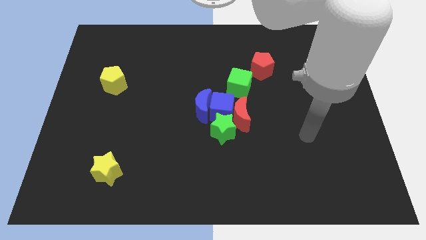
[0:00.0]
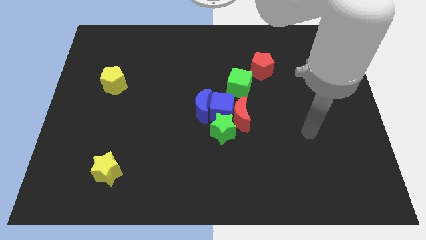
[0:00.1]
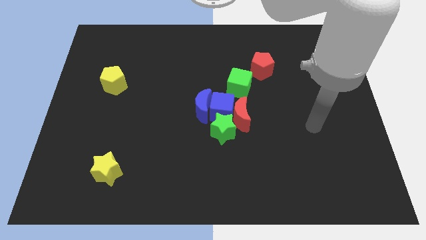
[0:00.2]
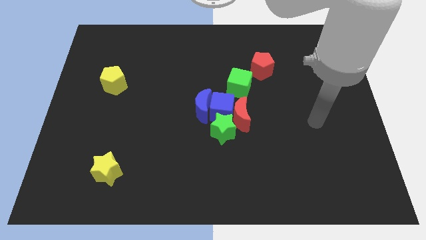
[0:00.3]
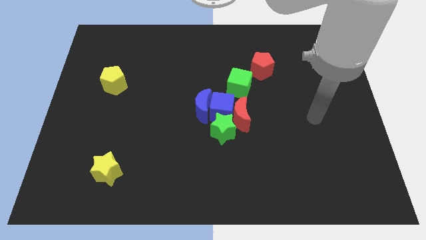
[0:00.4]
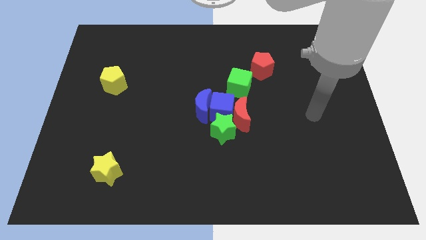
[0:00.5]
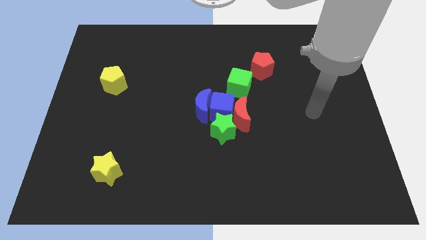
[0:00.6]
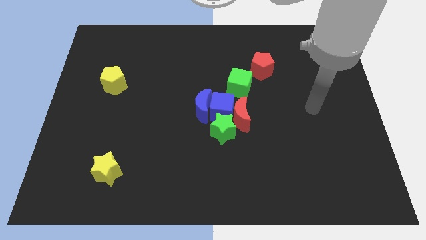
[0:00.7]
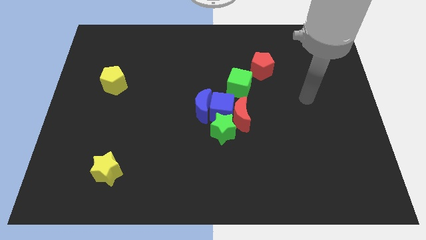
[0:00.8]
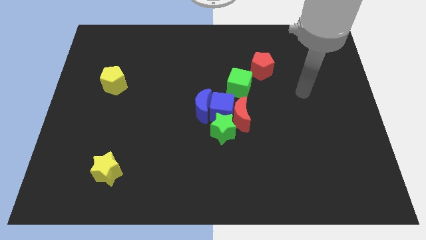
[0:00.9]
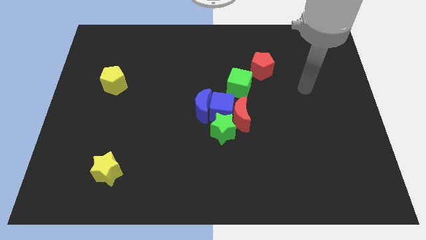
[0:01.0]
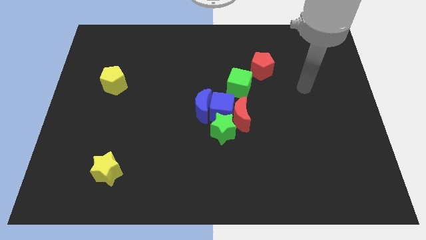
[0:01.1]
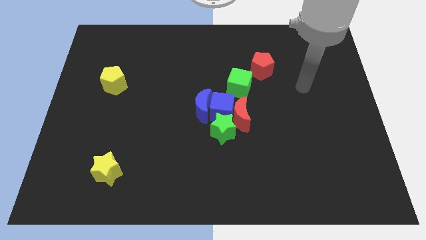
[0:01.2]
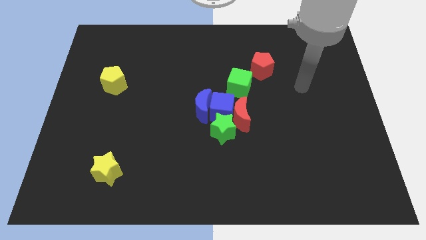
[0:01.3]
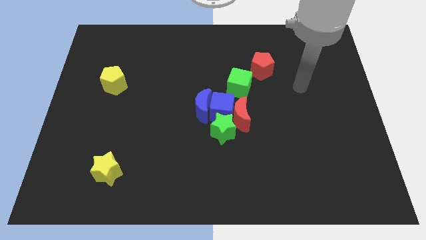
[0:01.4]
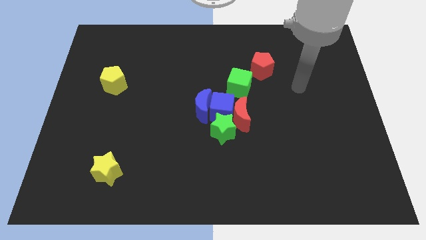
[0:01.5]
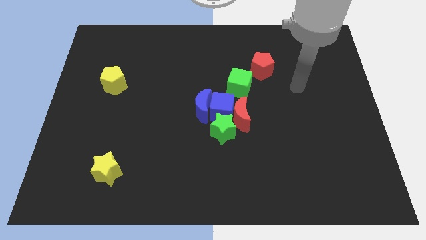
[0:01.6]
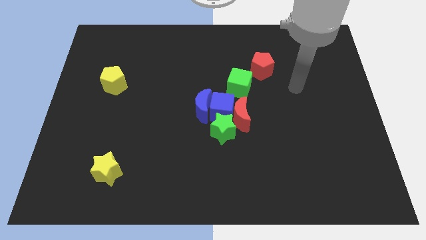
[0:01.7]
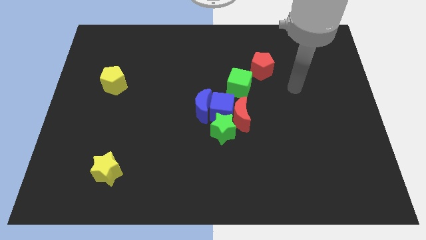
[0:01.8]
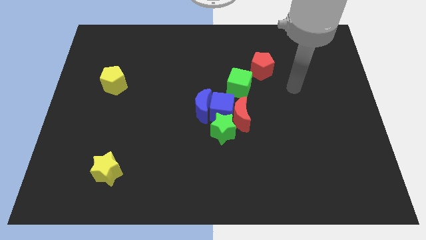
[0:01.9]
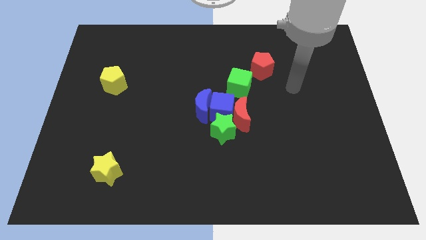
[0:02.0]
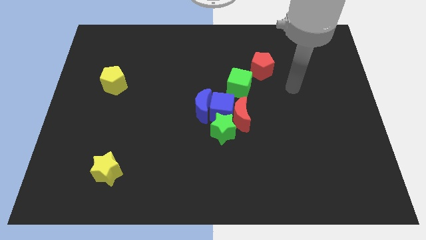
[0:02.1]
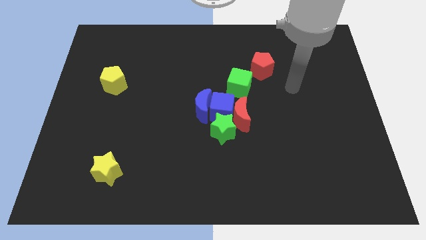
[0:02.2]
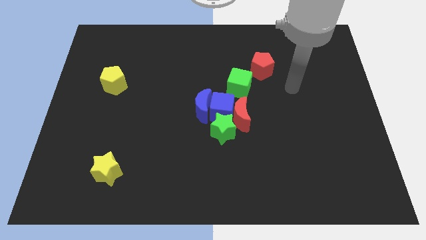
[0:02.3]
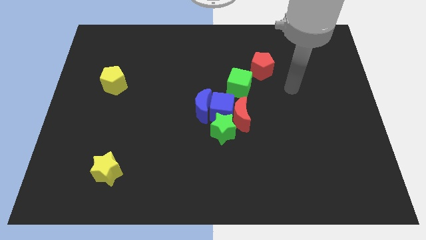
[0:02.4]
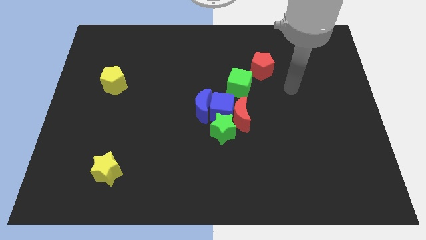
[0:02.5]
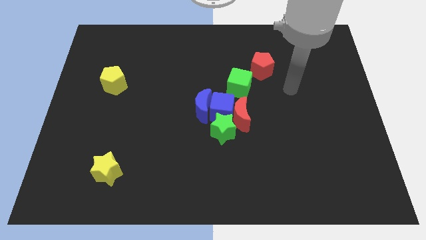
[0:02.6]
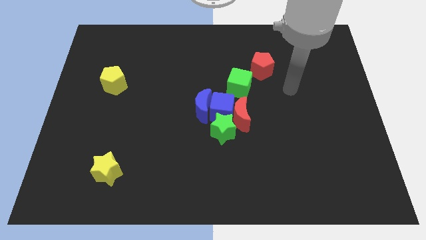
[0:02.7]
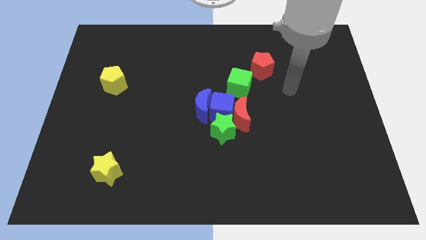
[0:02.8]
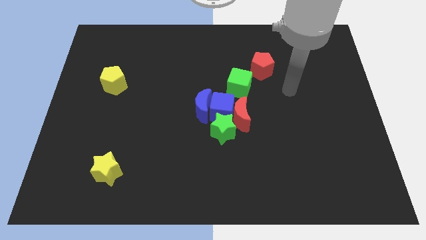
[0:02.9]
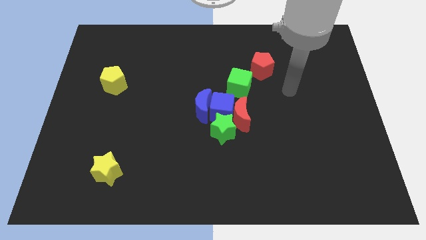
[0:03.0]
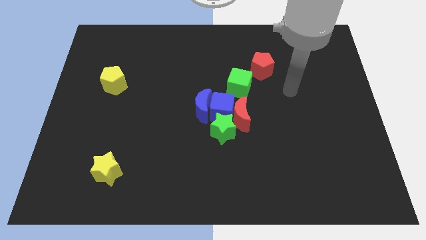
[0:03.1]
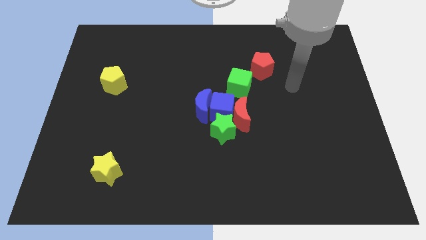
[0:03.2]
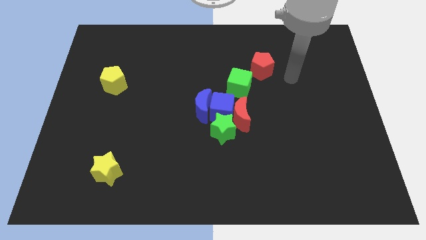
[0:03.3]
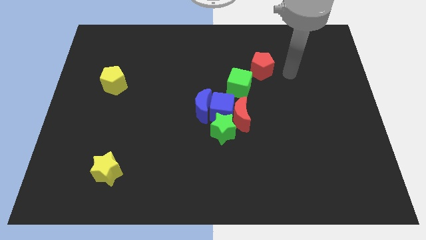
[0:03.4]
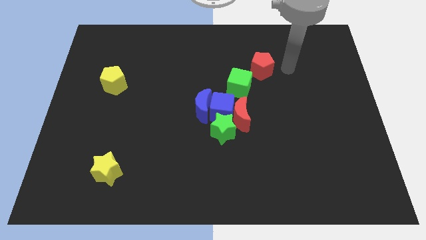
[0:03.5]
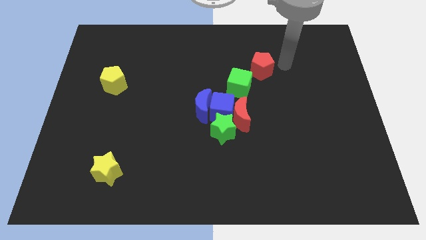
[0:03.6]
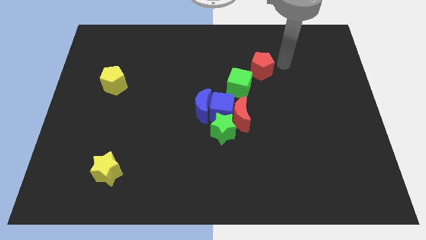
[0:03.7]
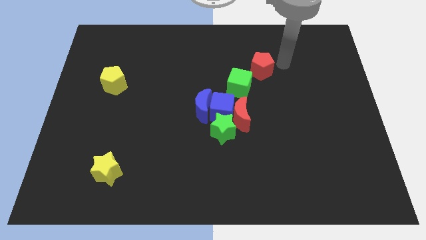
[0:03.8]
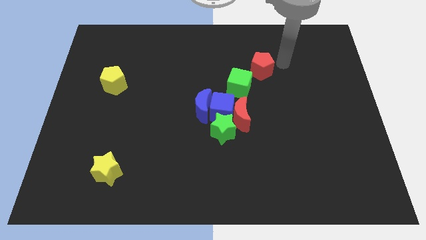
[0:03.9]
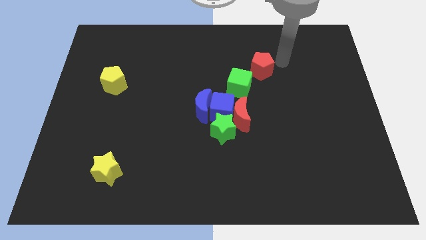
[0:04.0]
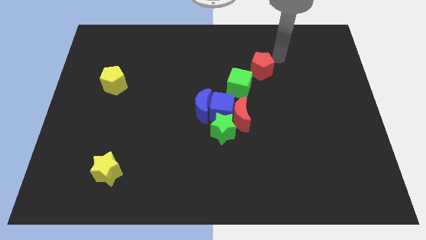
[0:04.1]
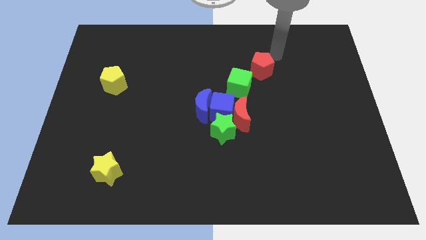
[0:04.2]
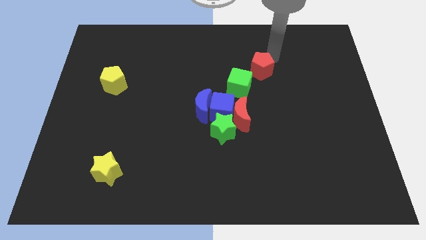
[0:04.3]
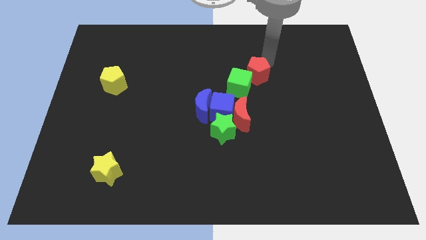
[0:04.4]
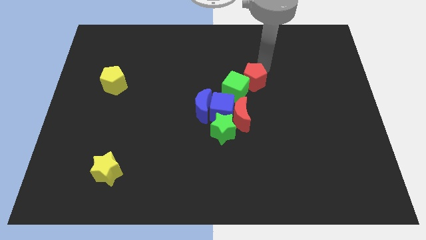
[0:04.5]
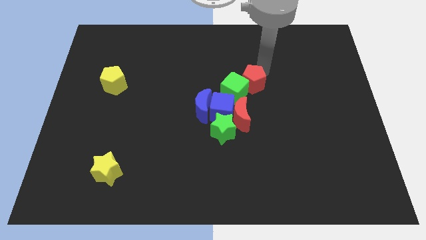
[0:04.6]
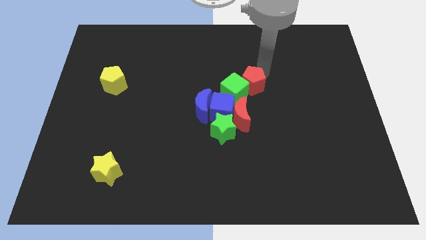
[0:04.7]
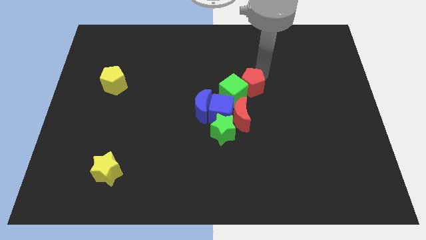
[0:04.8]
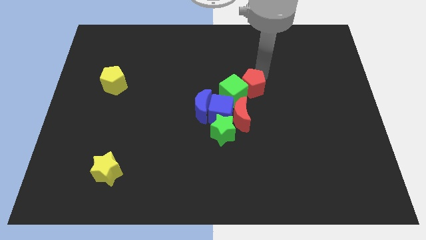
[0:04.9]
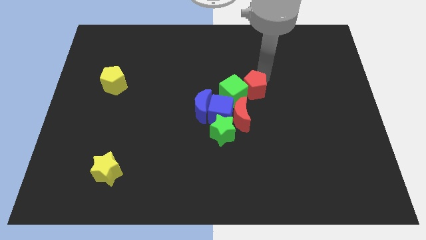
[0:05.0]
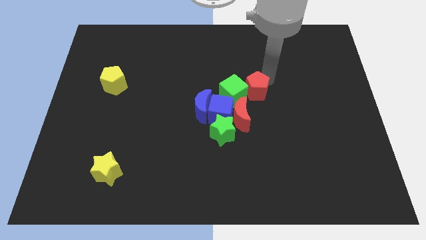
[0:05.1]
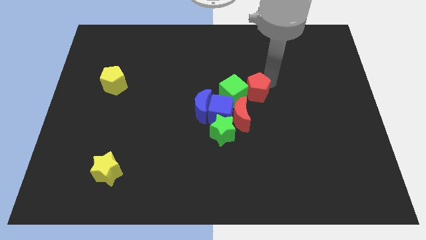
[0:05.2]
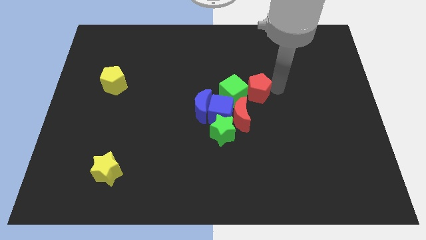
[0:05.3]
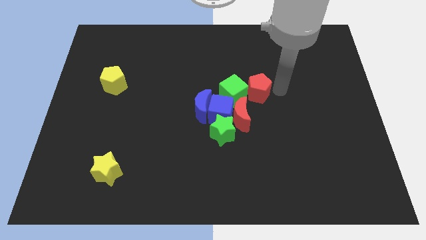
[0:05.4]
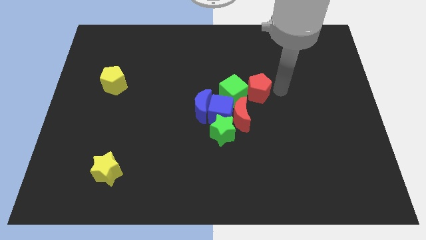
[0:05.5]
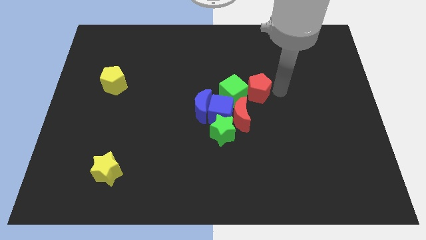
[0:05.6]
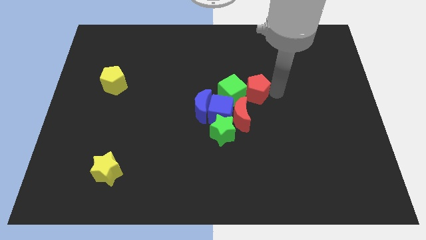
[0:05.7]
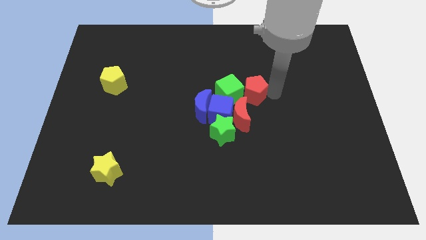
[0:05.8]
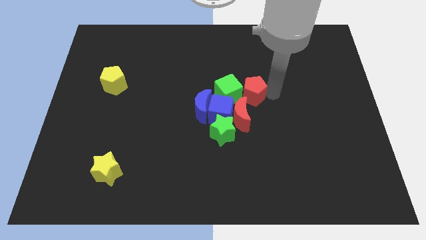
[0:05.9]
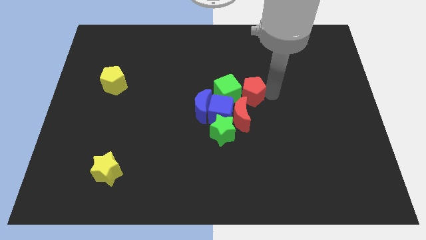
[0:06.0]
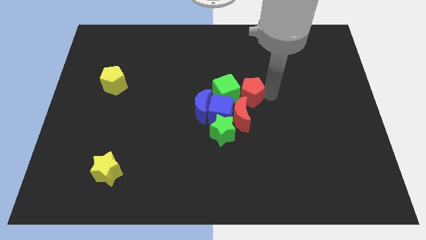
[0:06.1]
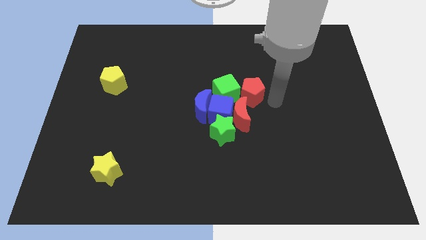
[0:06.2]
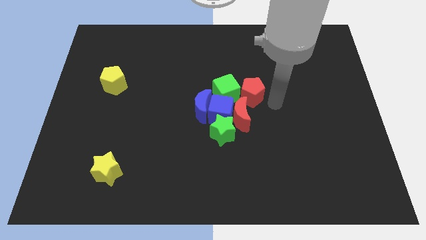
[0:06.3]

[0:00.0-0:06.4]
push red moon into the group of blocks

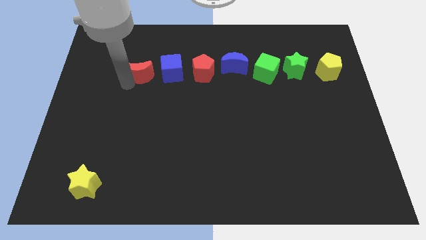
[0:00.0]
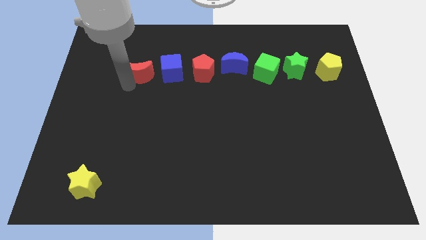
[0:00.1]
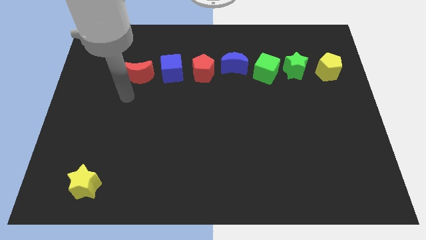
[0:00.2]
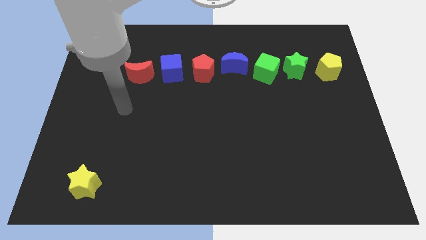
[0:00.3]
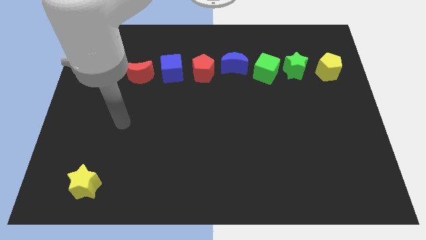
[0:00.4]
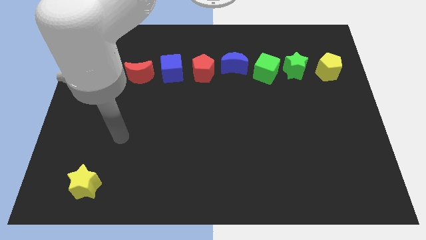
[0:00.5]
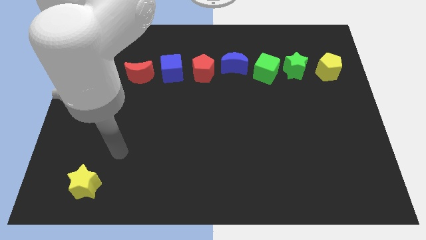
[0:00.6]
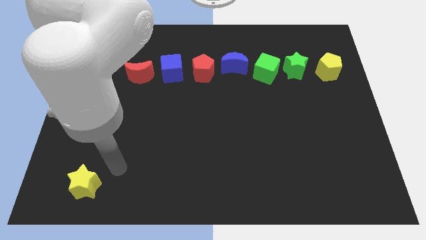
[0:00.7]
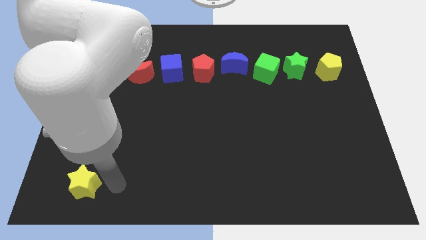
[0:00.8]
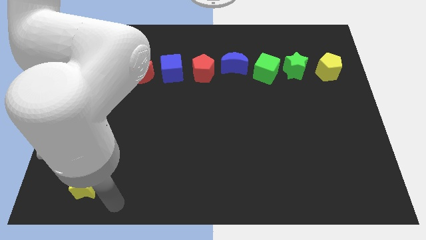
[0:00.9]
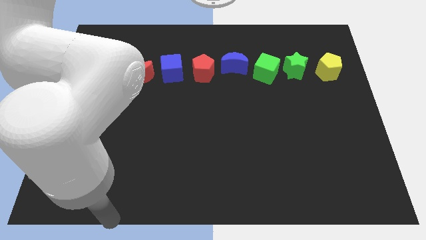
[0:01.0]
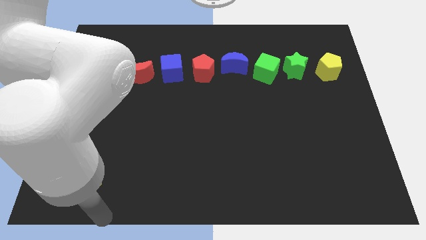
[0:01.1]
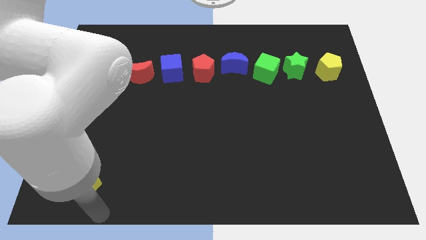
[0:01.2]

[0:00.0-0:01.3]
move your arm to the bottom left side of the board

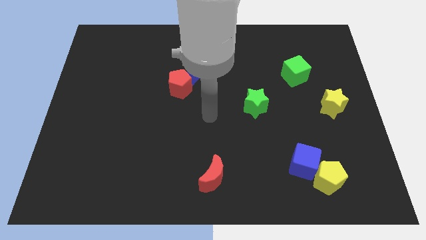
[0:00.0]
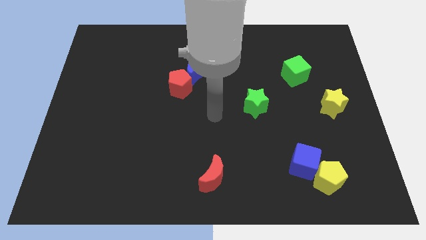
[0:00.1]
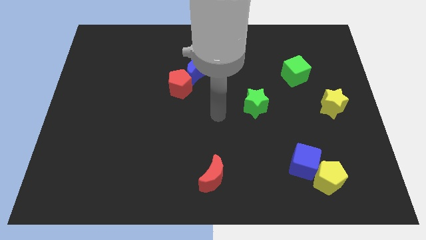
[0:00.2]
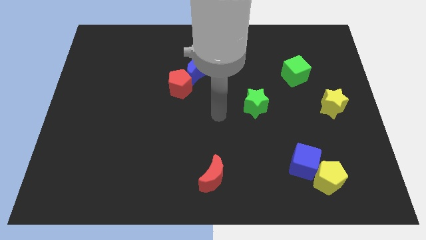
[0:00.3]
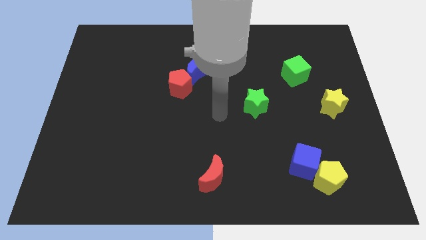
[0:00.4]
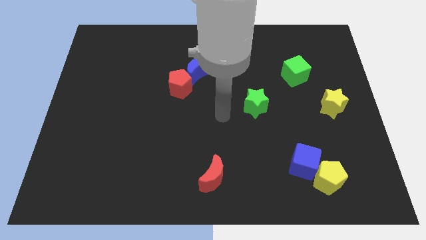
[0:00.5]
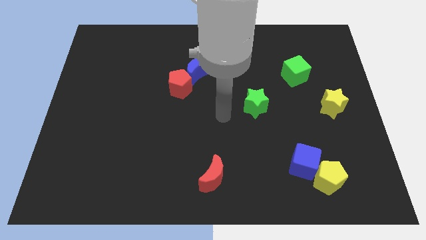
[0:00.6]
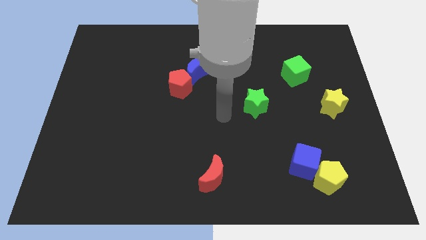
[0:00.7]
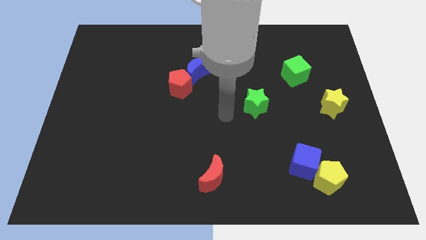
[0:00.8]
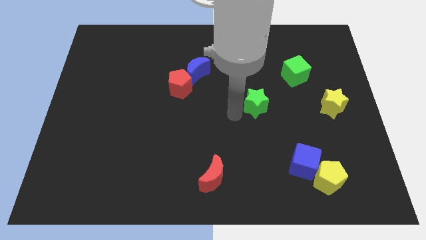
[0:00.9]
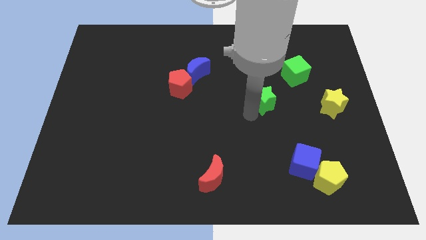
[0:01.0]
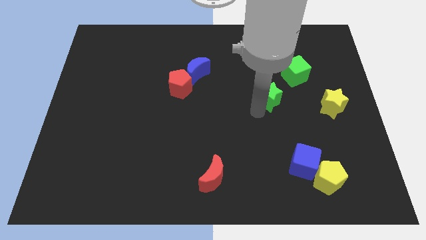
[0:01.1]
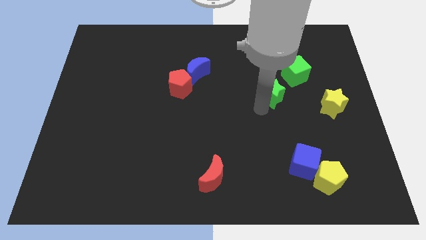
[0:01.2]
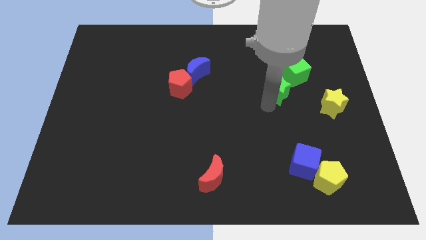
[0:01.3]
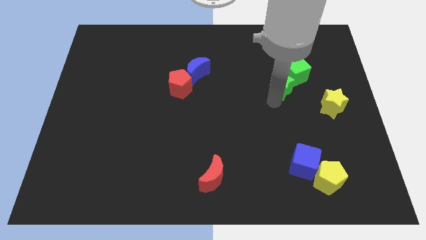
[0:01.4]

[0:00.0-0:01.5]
push the green star into the green cube
